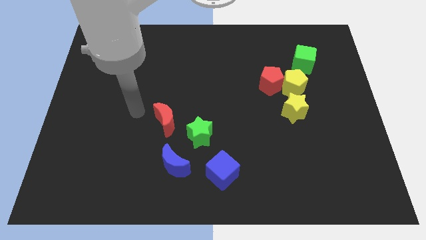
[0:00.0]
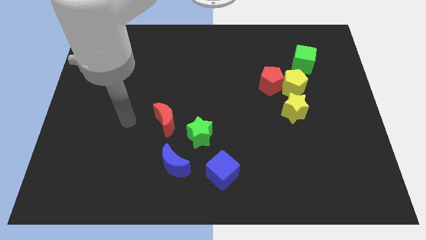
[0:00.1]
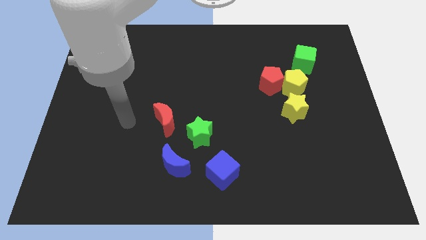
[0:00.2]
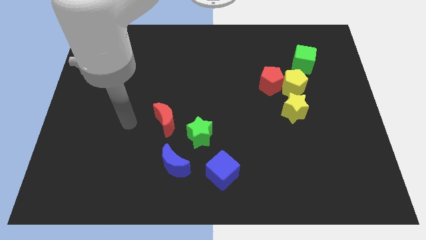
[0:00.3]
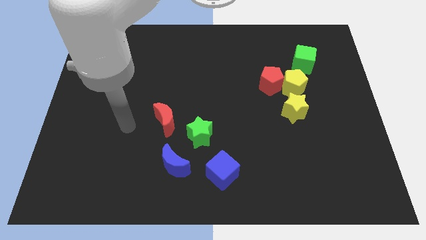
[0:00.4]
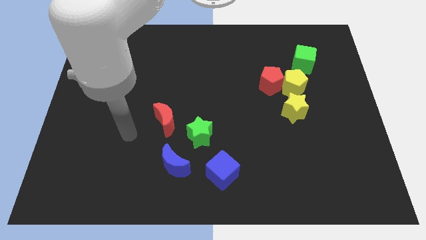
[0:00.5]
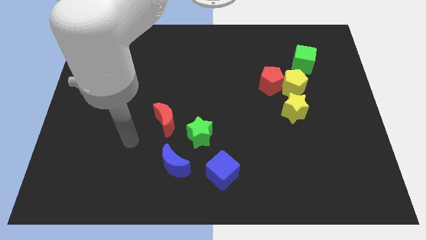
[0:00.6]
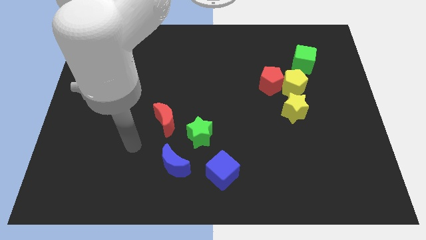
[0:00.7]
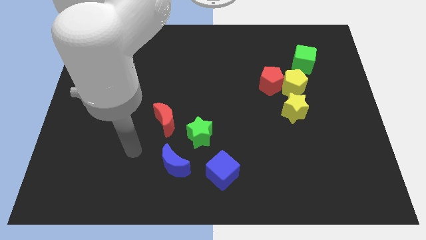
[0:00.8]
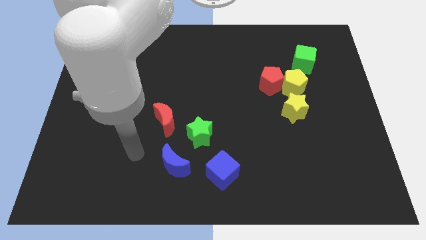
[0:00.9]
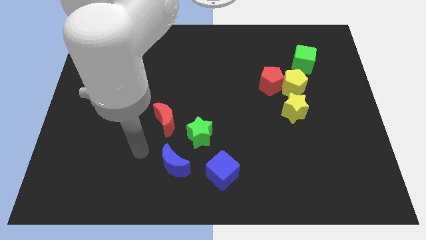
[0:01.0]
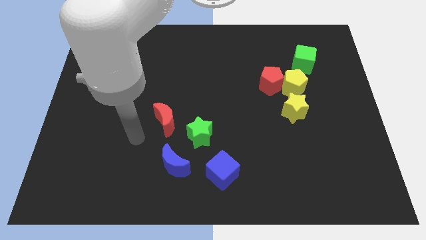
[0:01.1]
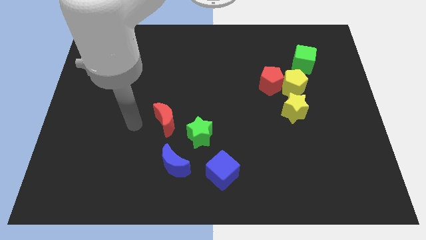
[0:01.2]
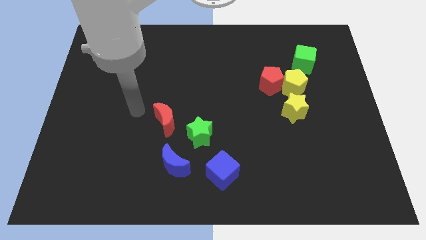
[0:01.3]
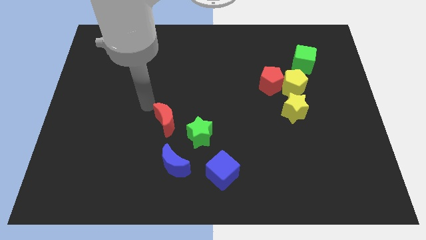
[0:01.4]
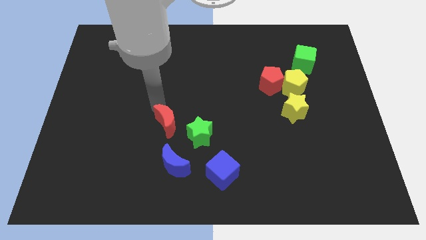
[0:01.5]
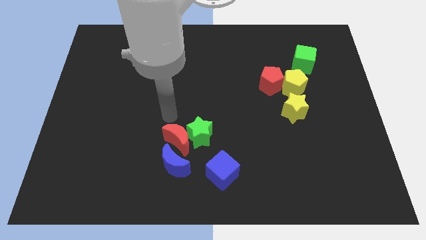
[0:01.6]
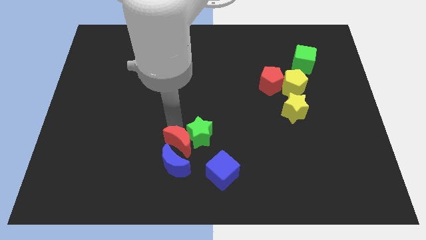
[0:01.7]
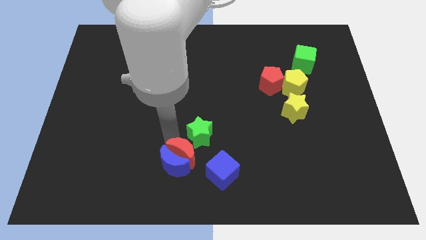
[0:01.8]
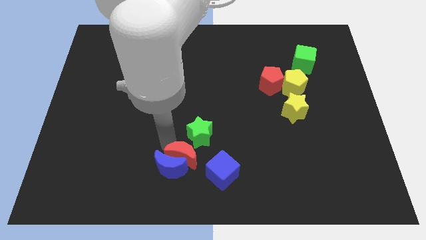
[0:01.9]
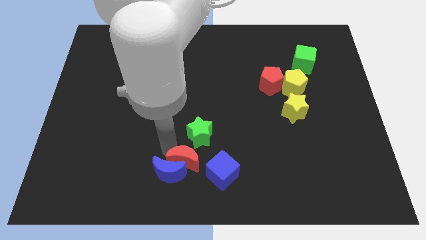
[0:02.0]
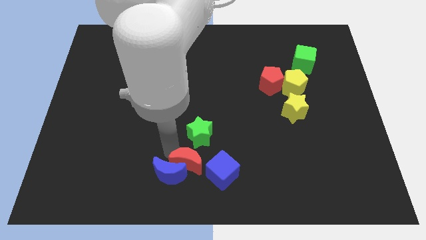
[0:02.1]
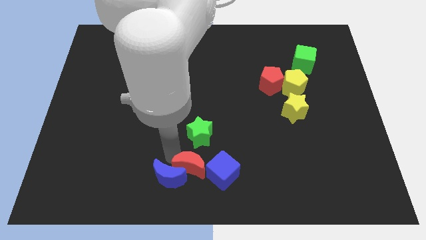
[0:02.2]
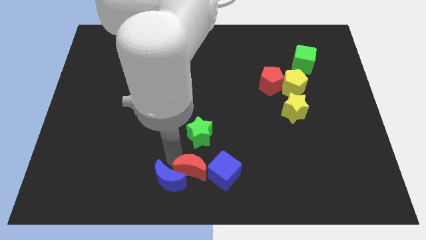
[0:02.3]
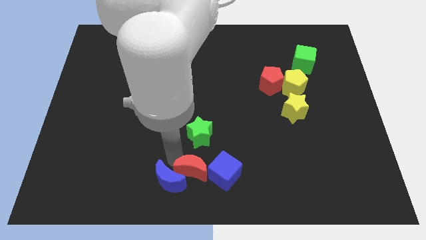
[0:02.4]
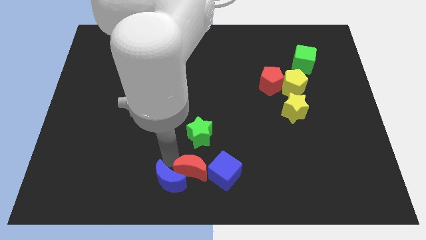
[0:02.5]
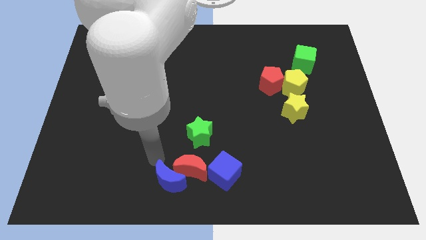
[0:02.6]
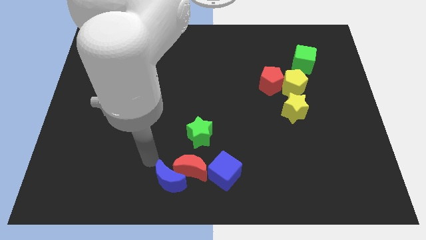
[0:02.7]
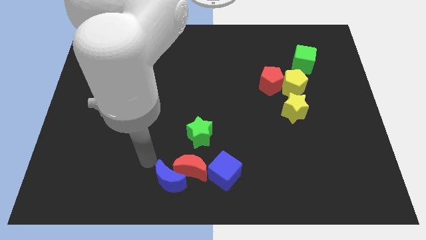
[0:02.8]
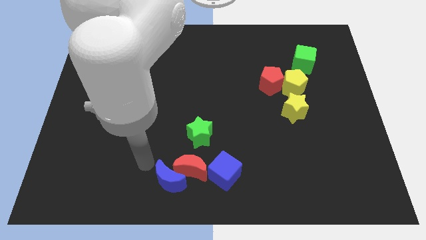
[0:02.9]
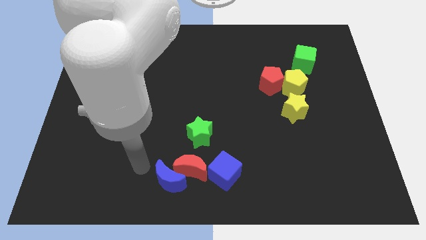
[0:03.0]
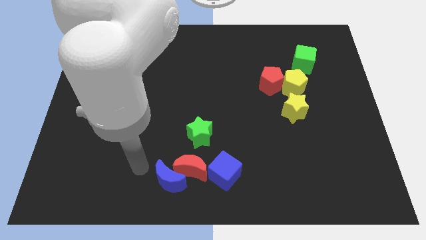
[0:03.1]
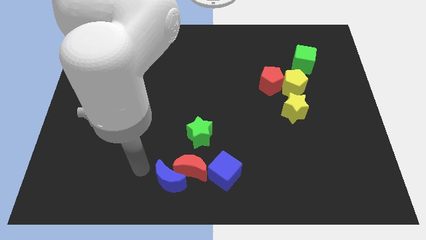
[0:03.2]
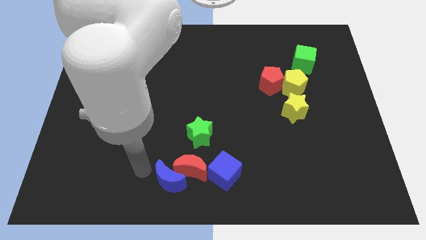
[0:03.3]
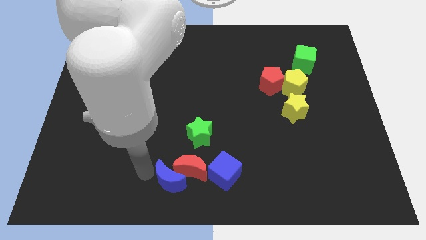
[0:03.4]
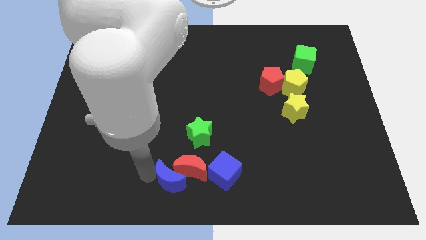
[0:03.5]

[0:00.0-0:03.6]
move the red crescent in between the blue cube and blue crescent

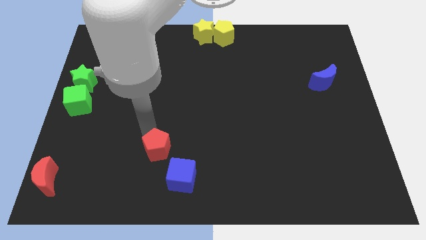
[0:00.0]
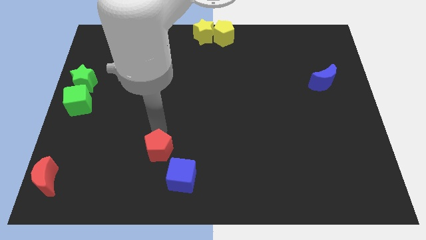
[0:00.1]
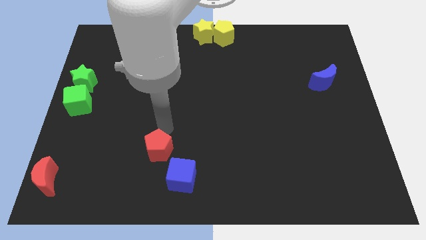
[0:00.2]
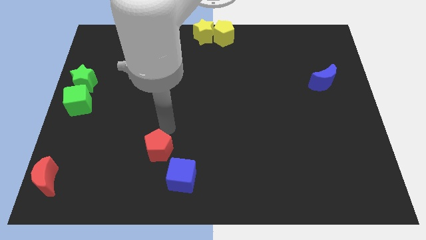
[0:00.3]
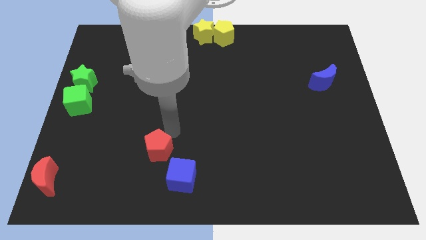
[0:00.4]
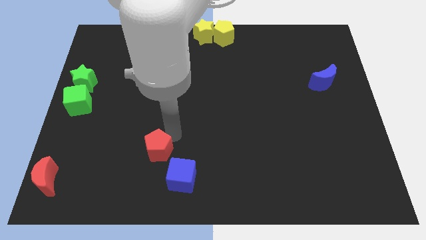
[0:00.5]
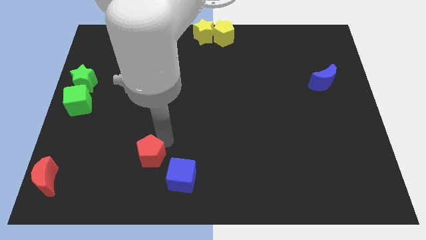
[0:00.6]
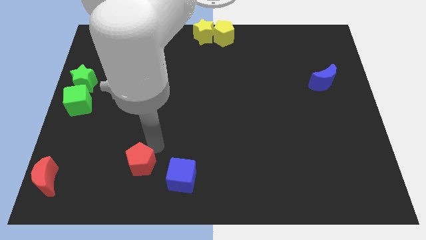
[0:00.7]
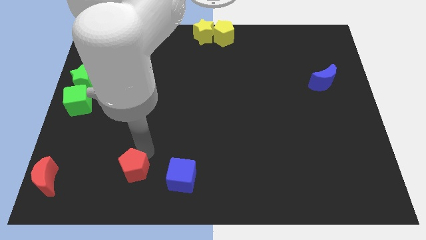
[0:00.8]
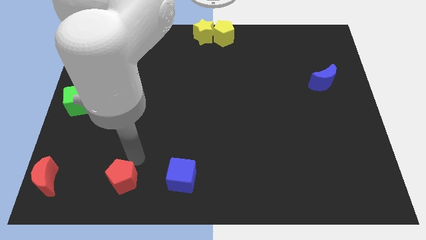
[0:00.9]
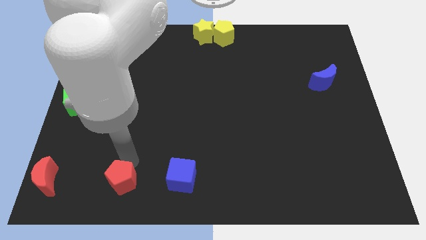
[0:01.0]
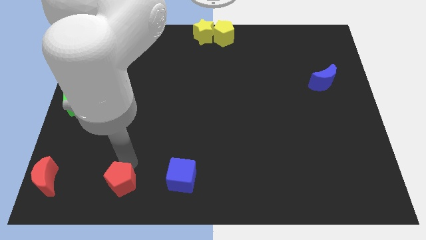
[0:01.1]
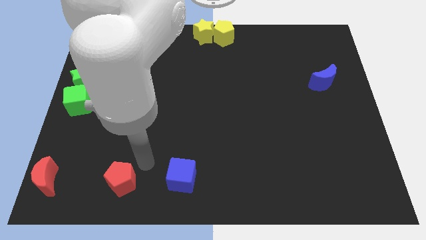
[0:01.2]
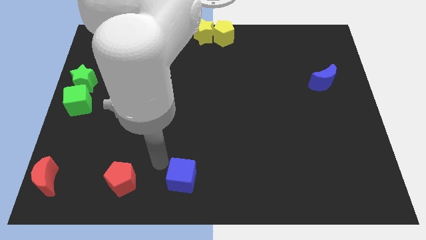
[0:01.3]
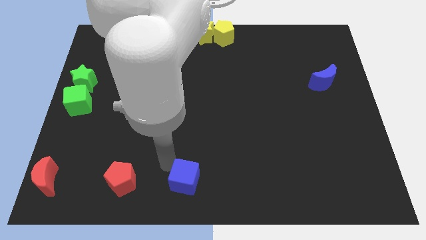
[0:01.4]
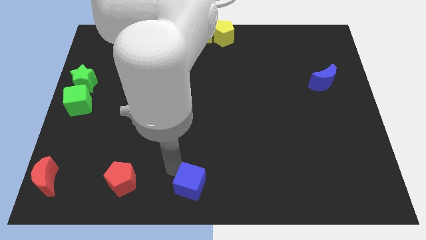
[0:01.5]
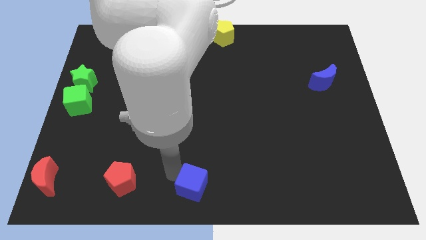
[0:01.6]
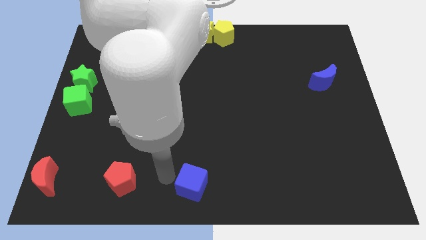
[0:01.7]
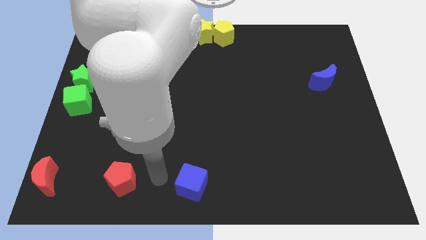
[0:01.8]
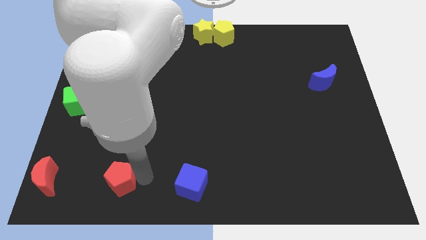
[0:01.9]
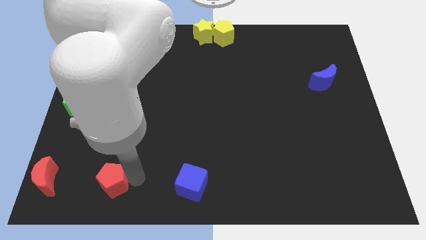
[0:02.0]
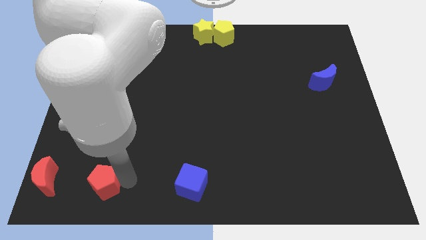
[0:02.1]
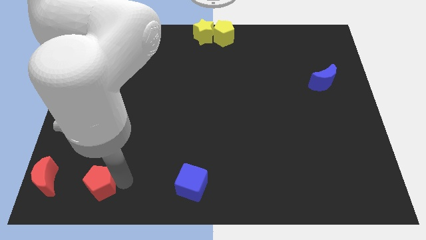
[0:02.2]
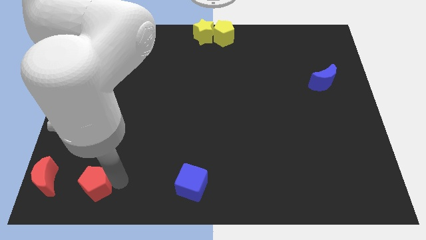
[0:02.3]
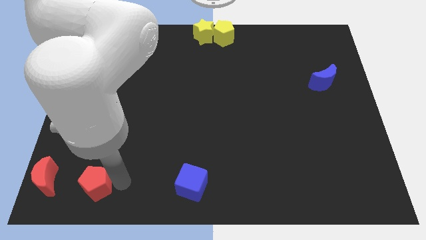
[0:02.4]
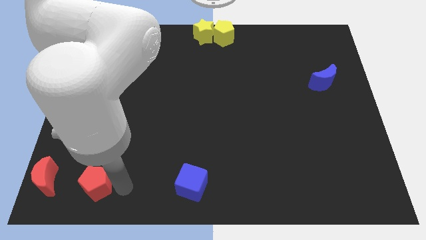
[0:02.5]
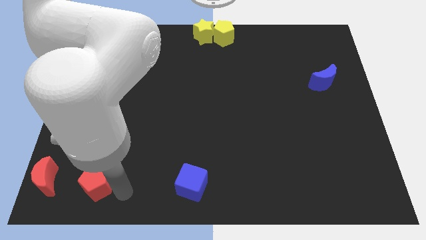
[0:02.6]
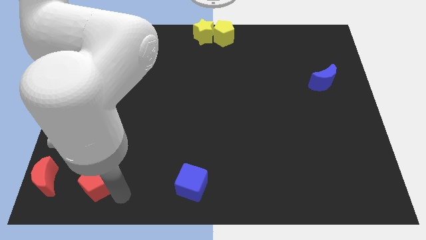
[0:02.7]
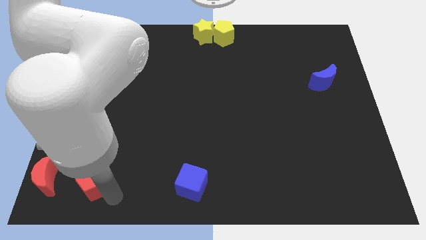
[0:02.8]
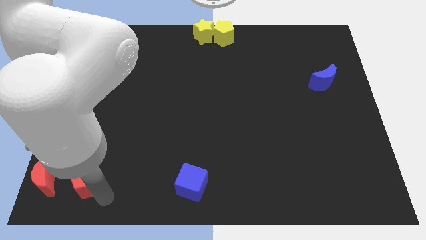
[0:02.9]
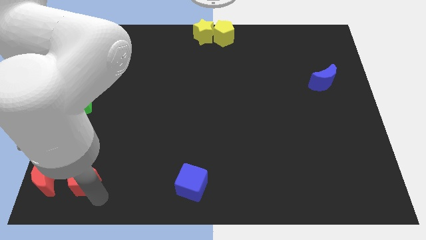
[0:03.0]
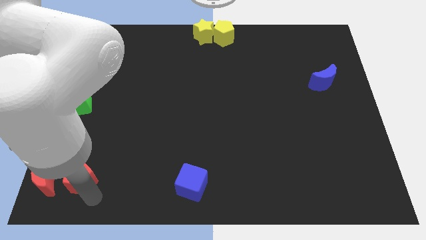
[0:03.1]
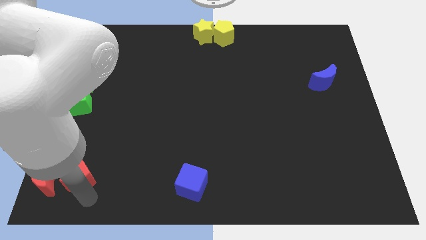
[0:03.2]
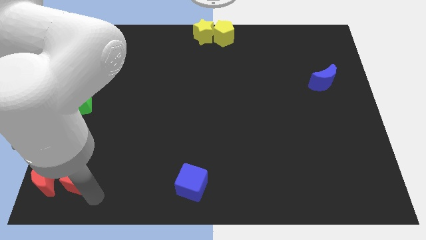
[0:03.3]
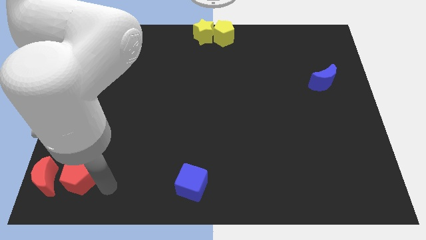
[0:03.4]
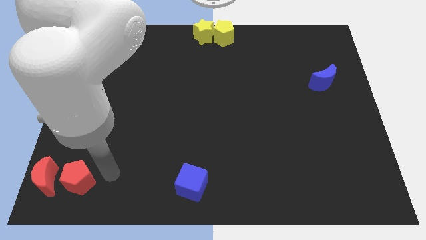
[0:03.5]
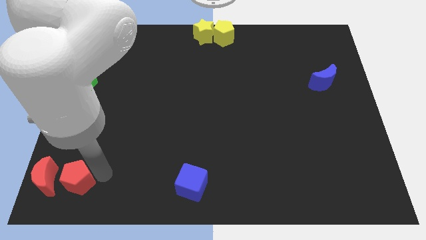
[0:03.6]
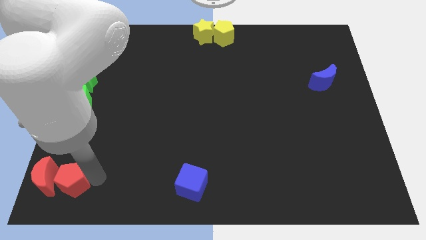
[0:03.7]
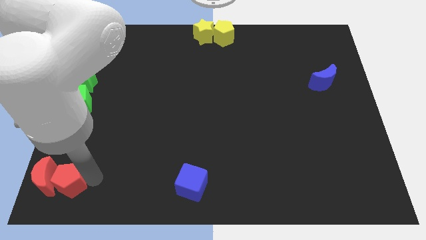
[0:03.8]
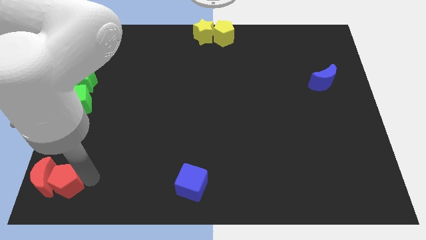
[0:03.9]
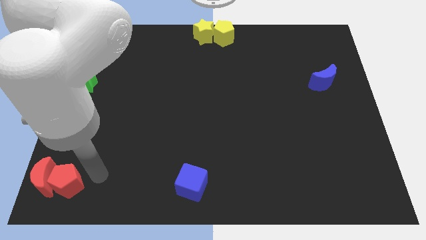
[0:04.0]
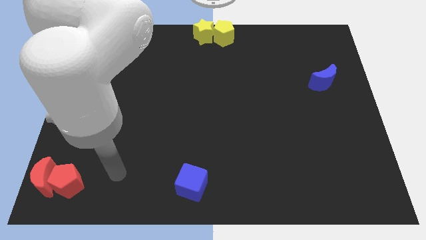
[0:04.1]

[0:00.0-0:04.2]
move the red pentagon into the red moon

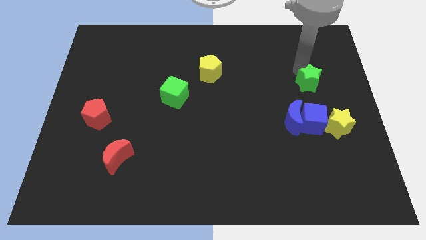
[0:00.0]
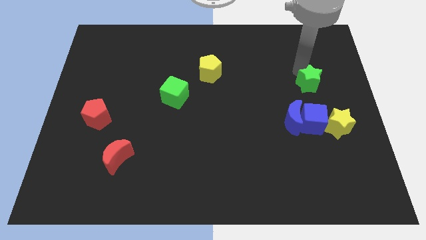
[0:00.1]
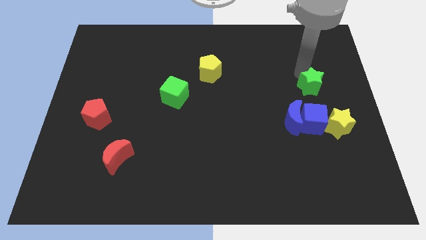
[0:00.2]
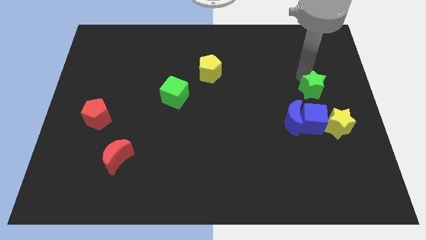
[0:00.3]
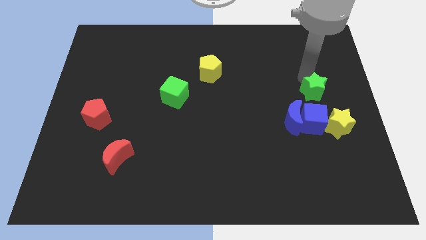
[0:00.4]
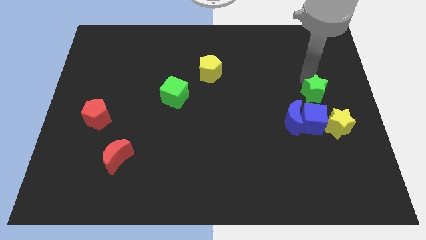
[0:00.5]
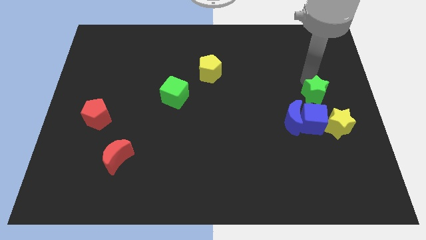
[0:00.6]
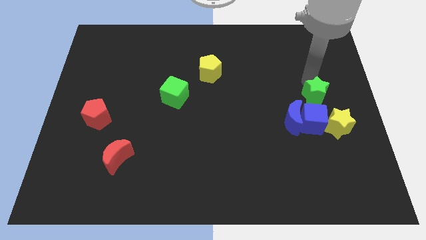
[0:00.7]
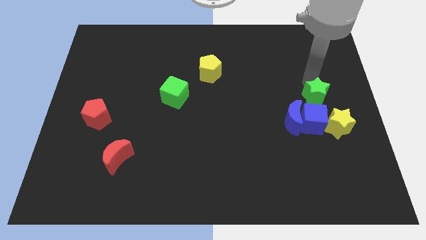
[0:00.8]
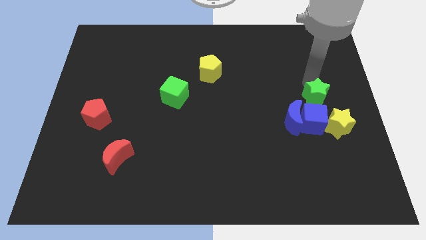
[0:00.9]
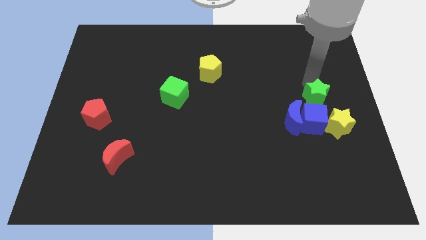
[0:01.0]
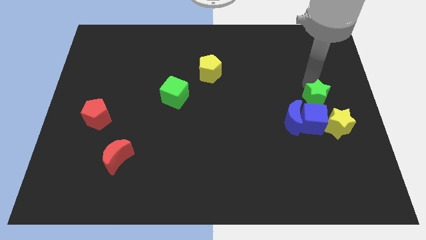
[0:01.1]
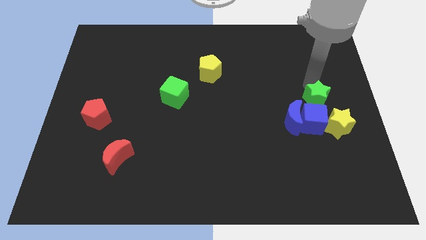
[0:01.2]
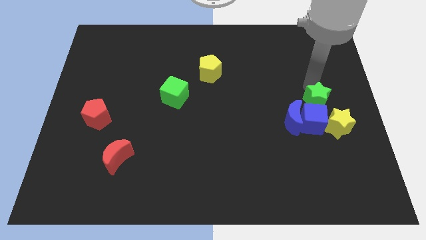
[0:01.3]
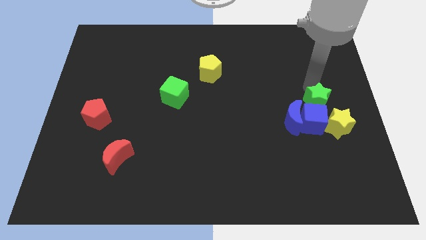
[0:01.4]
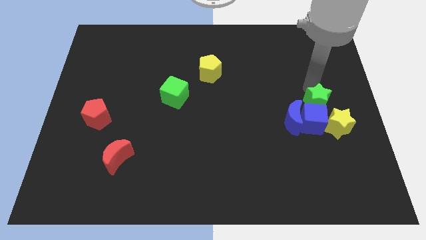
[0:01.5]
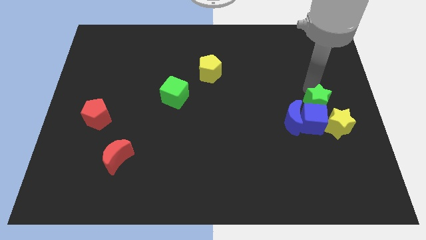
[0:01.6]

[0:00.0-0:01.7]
place the green star above the blue cube
